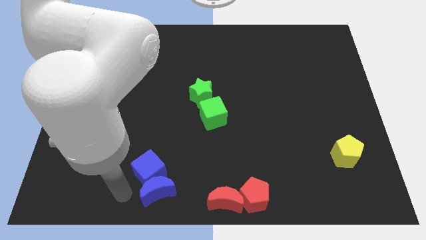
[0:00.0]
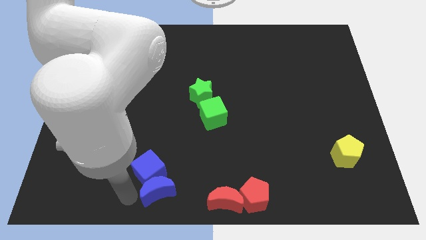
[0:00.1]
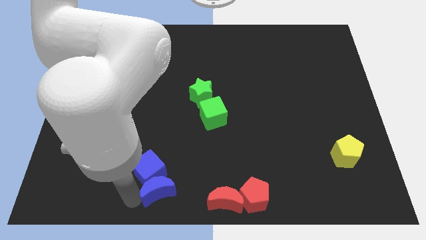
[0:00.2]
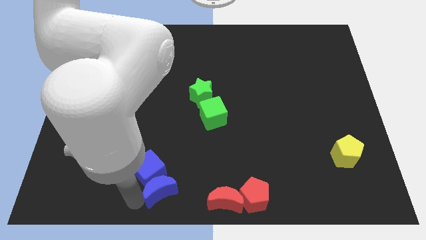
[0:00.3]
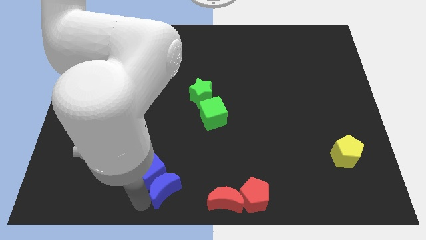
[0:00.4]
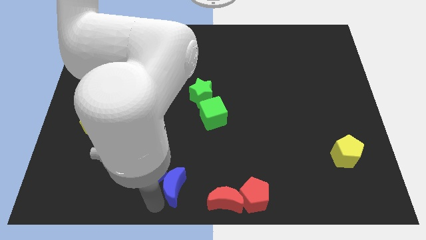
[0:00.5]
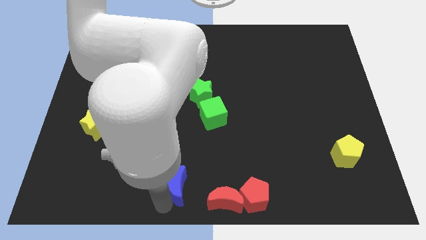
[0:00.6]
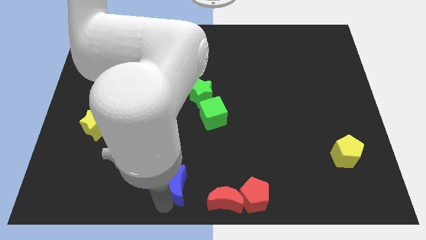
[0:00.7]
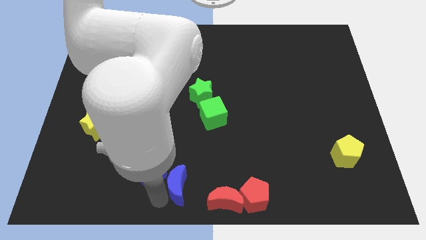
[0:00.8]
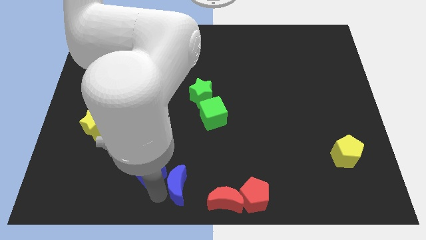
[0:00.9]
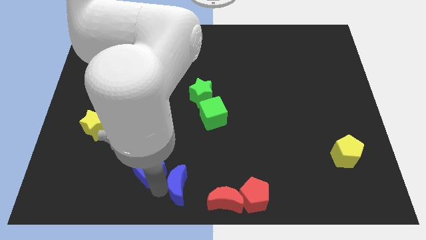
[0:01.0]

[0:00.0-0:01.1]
push the blue crescent towards the bottom center of the board

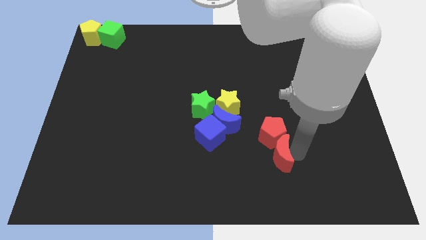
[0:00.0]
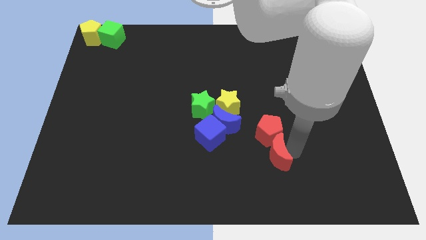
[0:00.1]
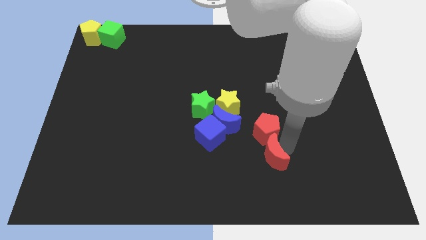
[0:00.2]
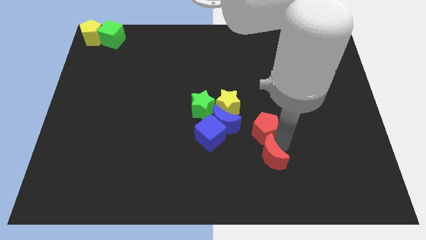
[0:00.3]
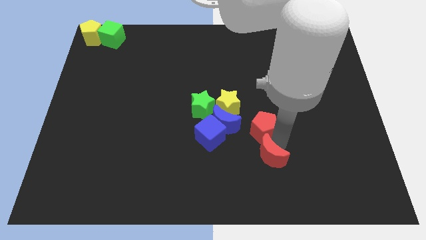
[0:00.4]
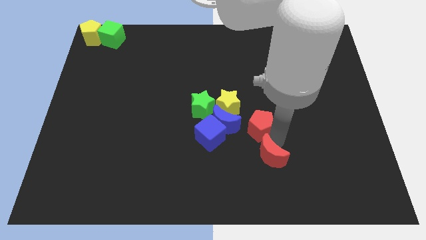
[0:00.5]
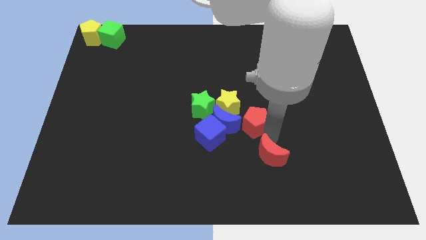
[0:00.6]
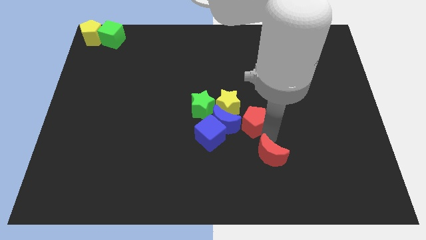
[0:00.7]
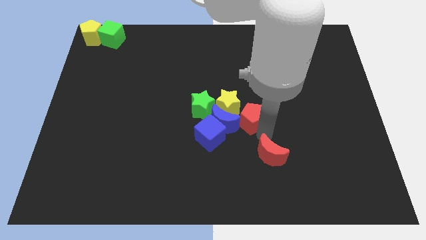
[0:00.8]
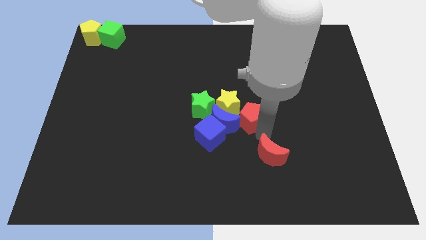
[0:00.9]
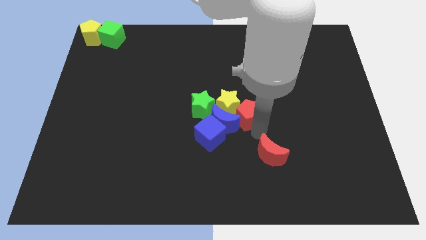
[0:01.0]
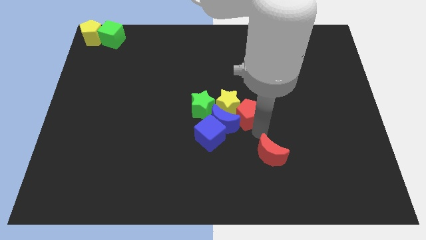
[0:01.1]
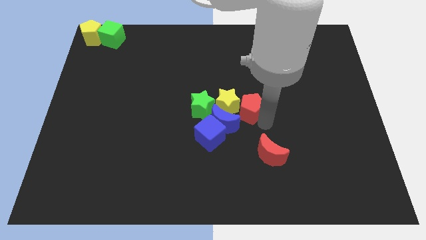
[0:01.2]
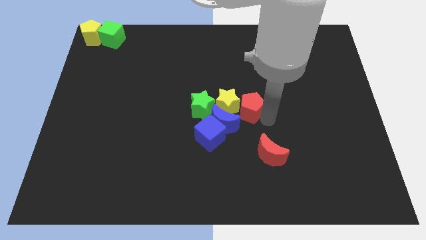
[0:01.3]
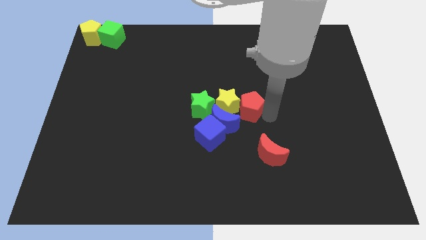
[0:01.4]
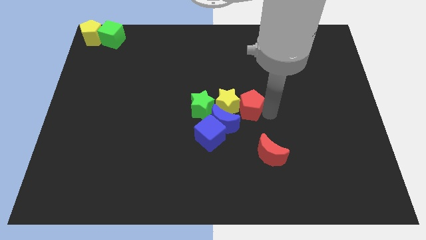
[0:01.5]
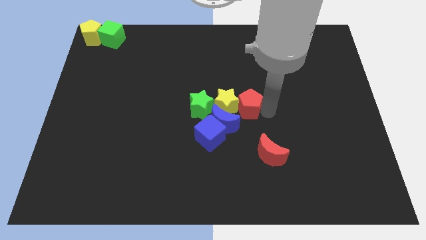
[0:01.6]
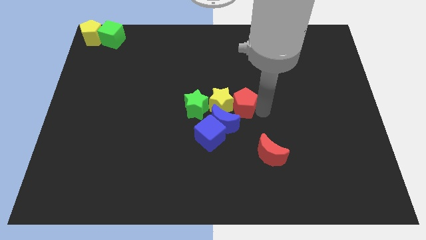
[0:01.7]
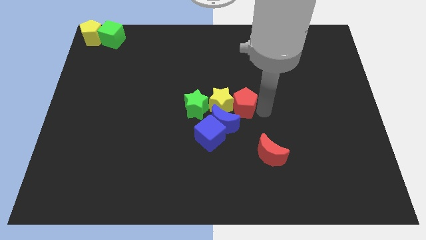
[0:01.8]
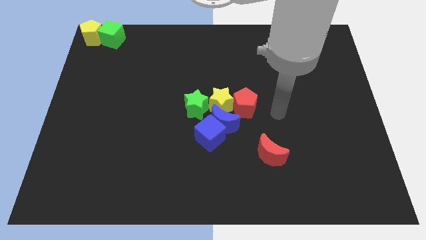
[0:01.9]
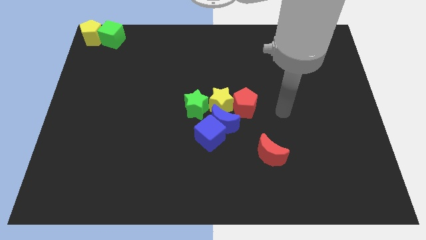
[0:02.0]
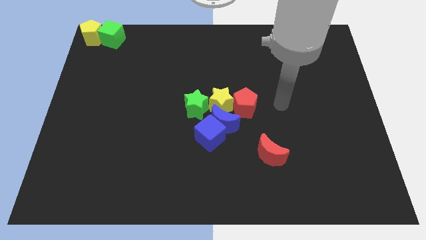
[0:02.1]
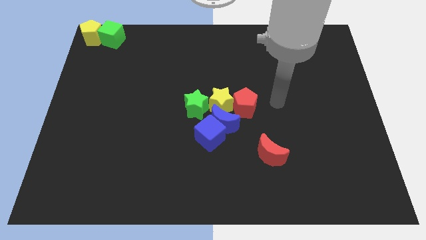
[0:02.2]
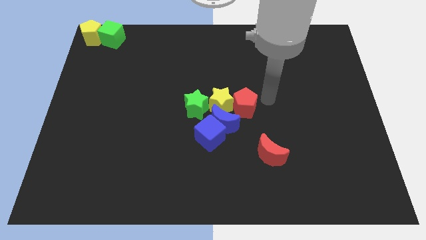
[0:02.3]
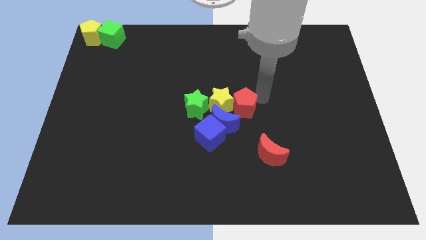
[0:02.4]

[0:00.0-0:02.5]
separate the red pentagon to the right of the yellow star at the center

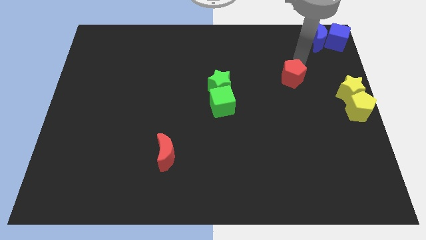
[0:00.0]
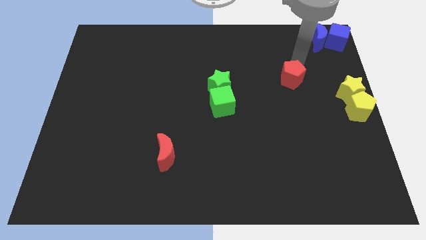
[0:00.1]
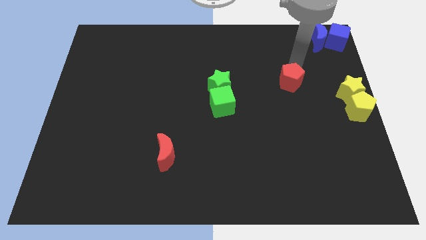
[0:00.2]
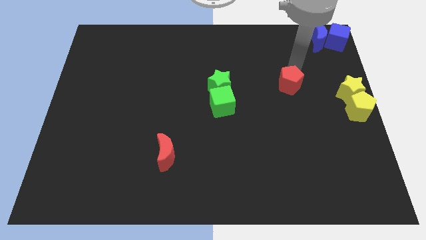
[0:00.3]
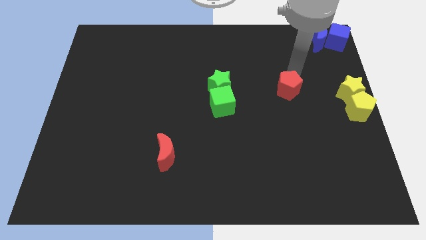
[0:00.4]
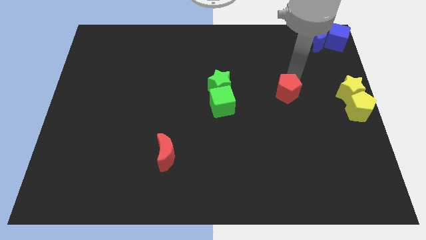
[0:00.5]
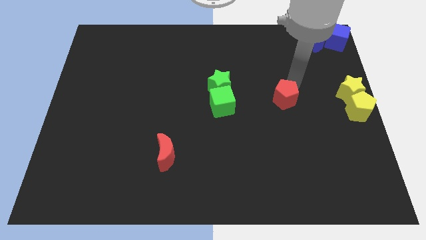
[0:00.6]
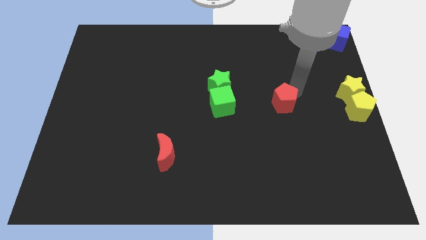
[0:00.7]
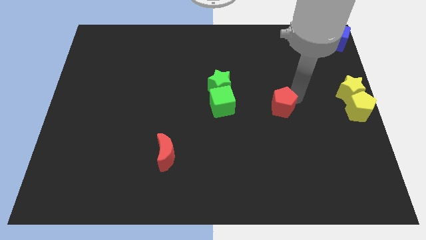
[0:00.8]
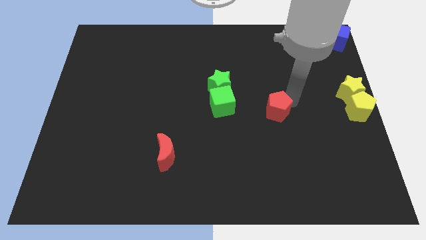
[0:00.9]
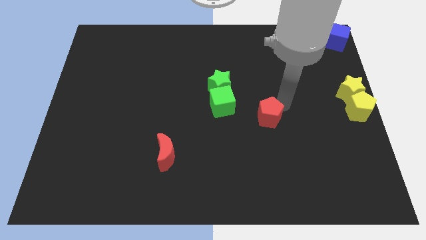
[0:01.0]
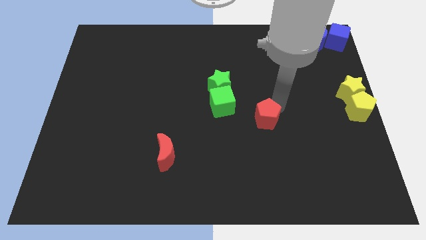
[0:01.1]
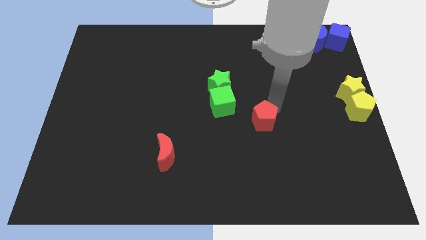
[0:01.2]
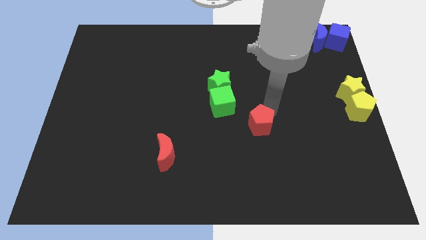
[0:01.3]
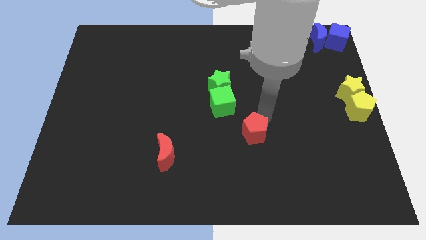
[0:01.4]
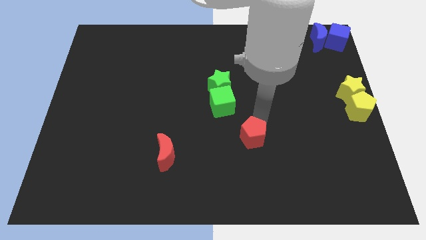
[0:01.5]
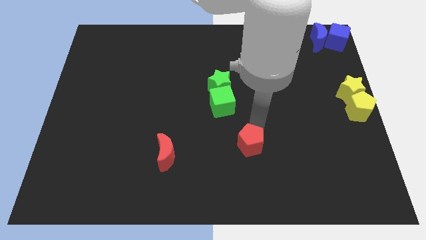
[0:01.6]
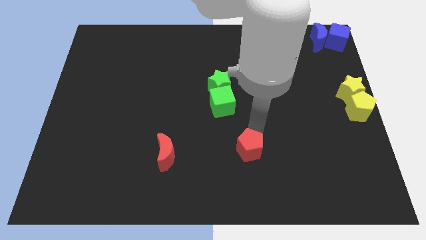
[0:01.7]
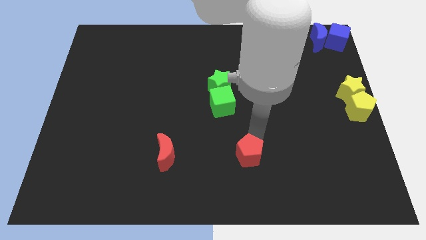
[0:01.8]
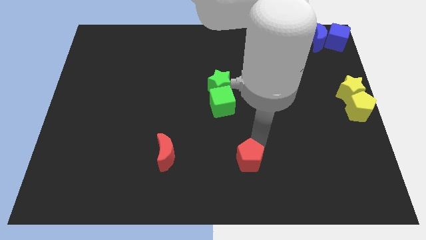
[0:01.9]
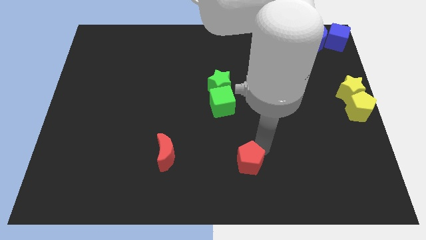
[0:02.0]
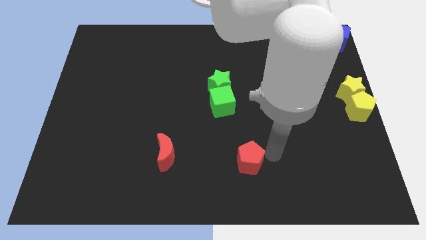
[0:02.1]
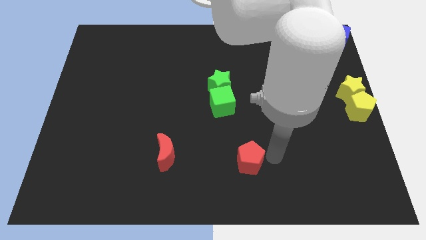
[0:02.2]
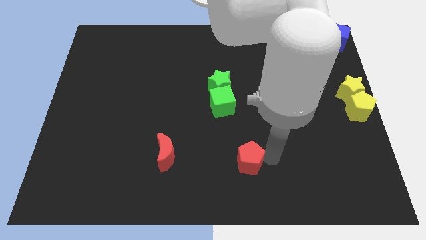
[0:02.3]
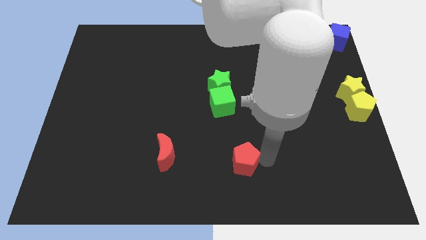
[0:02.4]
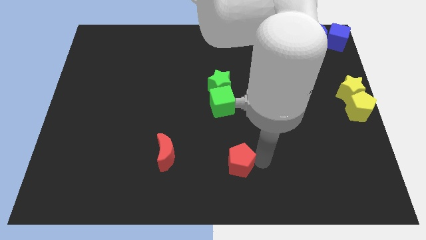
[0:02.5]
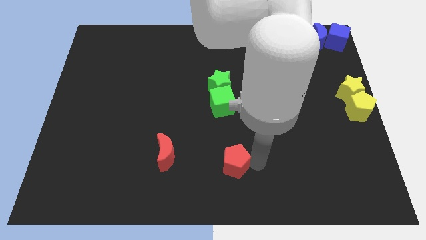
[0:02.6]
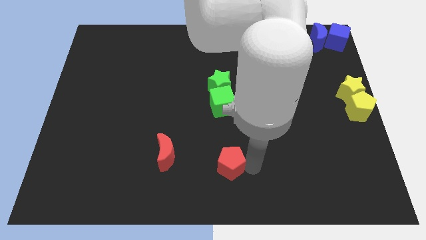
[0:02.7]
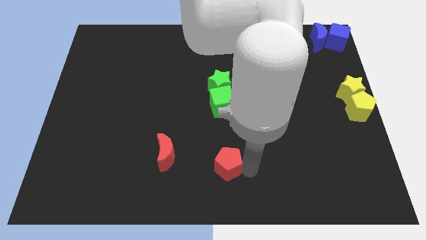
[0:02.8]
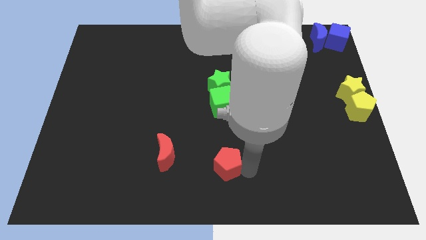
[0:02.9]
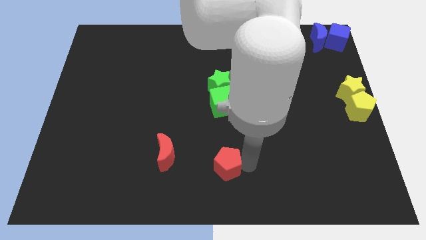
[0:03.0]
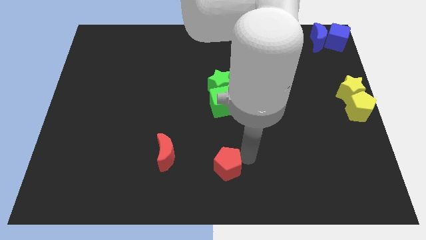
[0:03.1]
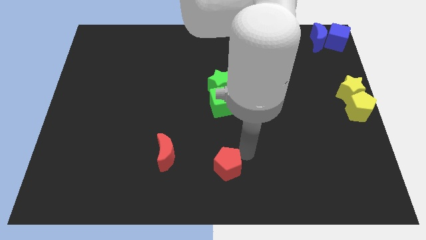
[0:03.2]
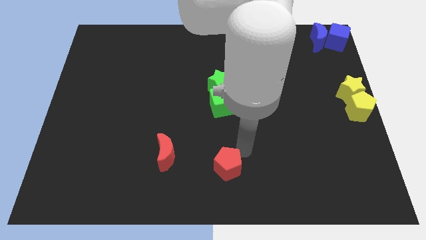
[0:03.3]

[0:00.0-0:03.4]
place red pentagon vertically towards green cube

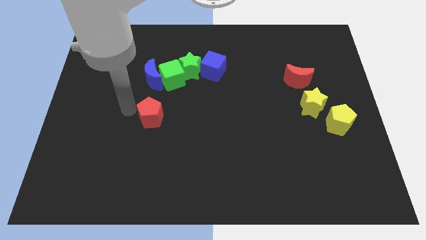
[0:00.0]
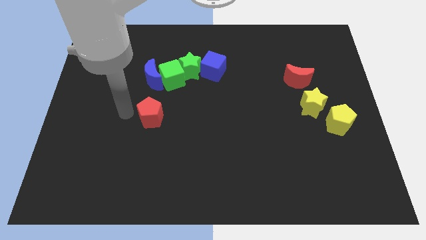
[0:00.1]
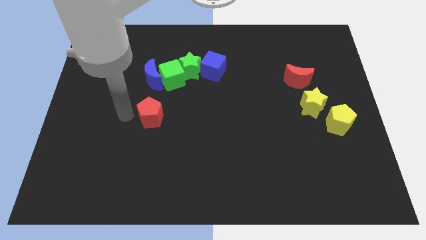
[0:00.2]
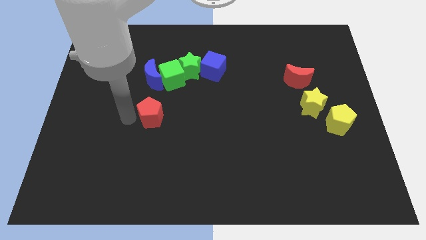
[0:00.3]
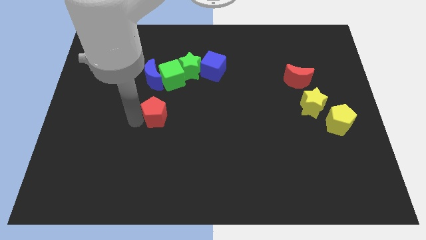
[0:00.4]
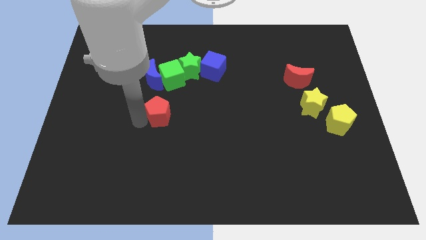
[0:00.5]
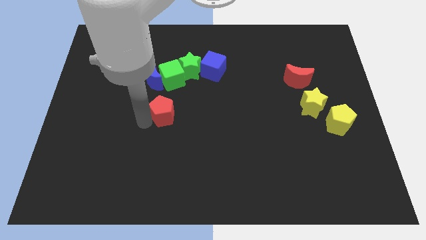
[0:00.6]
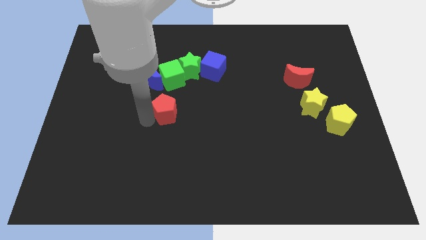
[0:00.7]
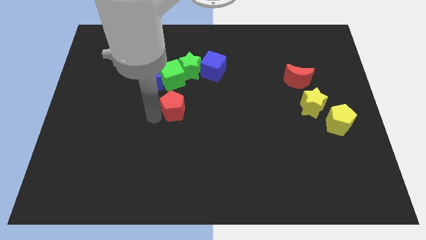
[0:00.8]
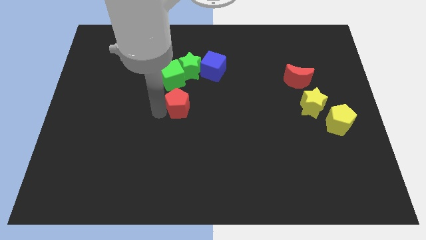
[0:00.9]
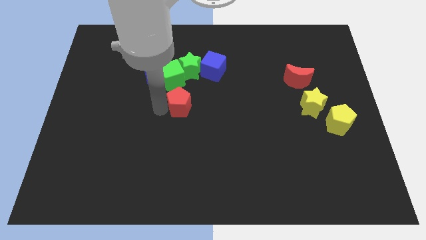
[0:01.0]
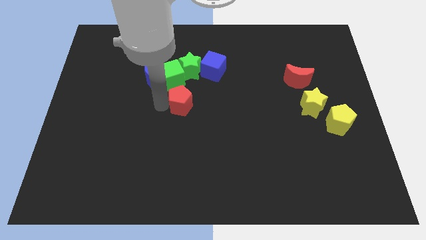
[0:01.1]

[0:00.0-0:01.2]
place red pentagon below the green cube

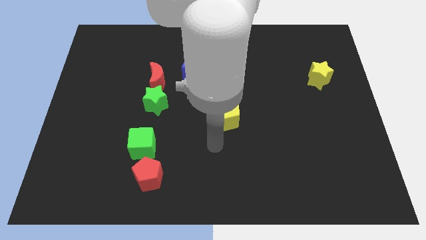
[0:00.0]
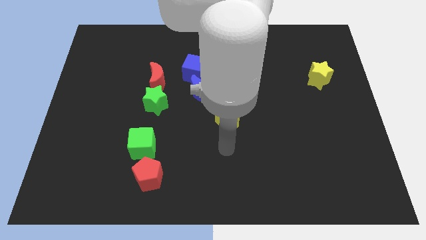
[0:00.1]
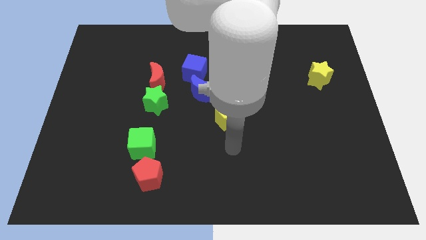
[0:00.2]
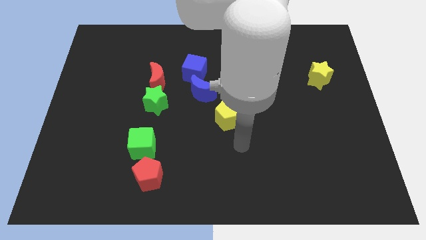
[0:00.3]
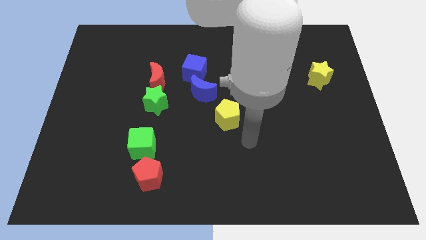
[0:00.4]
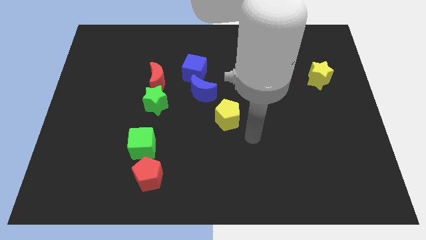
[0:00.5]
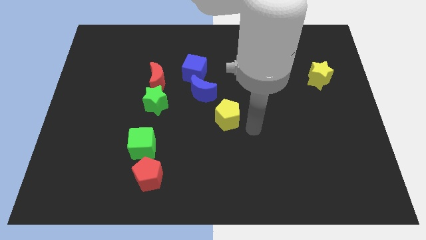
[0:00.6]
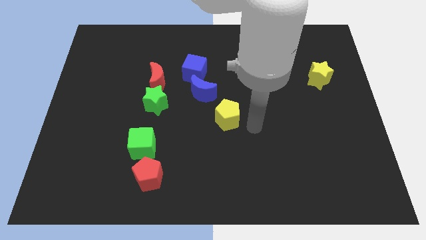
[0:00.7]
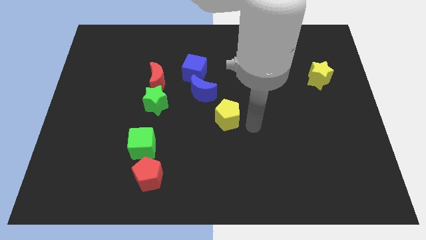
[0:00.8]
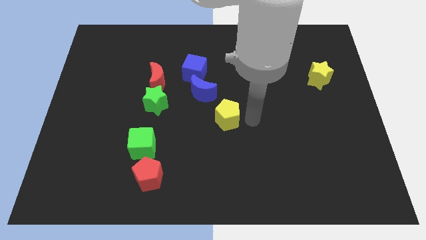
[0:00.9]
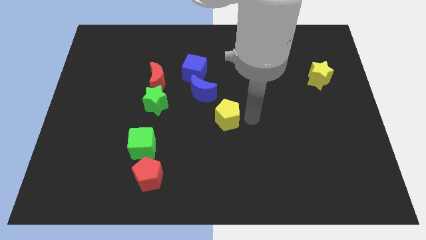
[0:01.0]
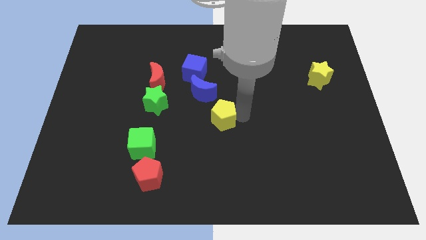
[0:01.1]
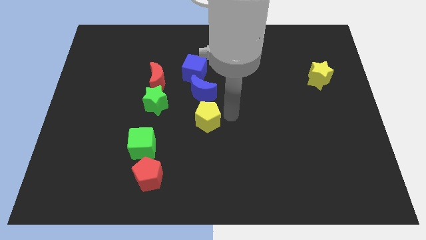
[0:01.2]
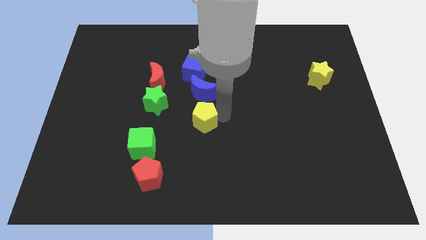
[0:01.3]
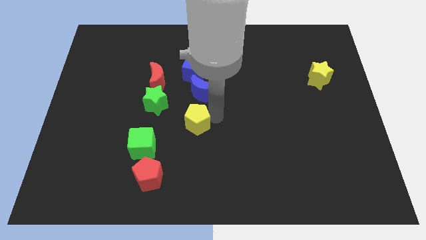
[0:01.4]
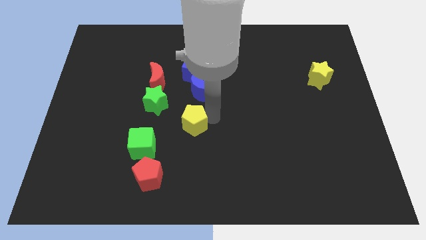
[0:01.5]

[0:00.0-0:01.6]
move the yellow pentagon slightly to the left
